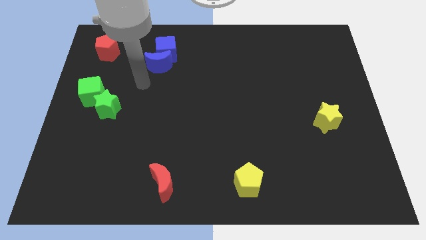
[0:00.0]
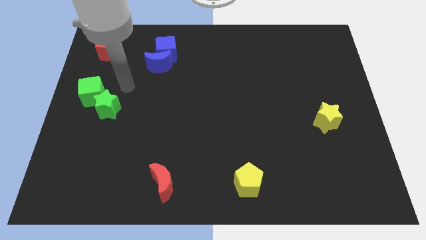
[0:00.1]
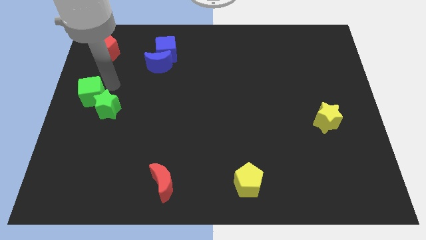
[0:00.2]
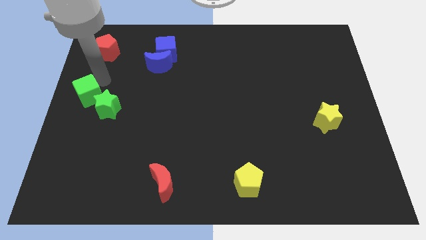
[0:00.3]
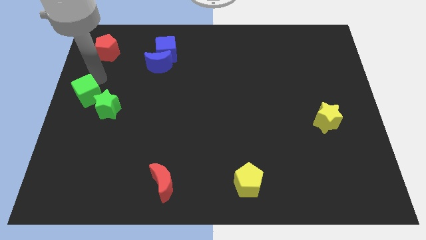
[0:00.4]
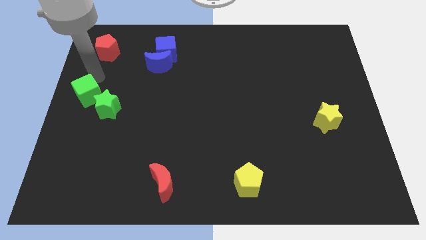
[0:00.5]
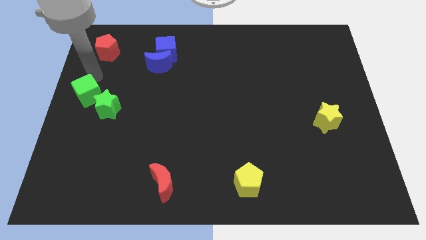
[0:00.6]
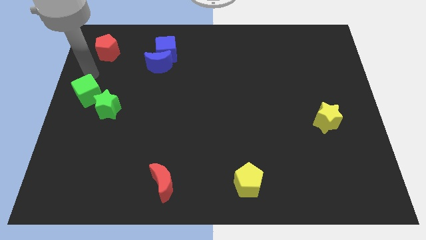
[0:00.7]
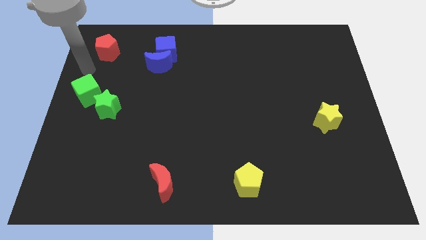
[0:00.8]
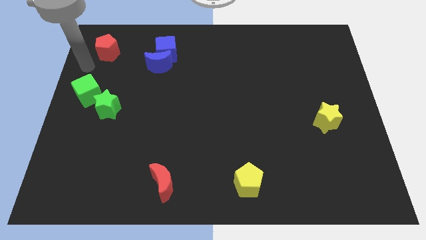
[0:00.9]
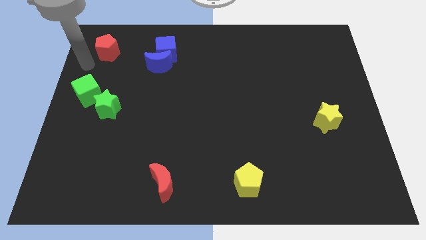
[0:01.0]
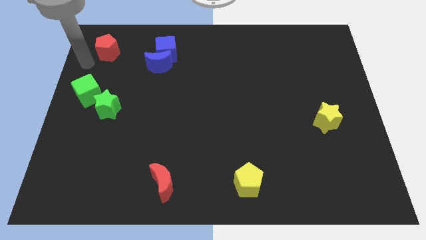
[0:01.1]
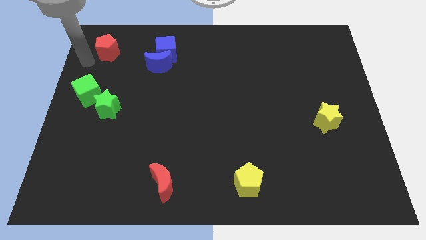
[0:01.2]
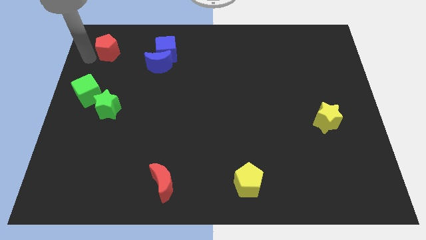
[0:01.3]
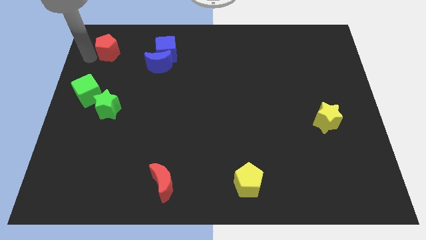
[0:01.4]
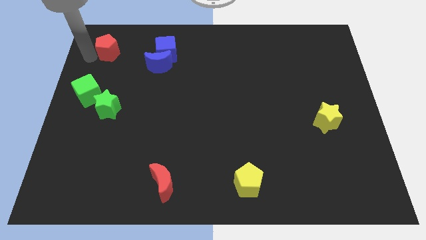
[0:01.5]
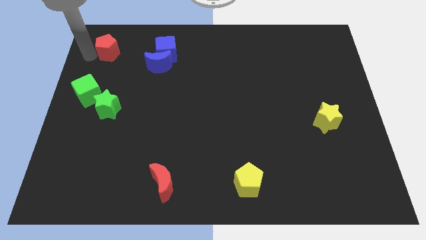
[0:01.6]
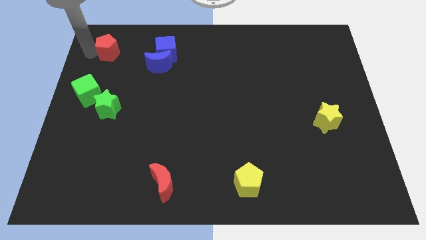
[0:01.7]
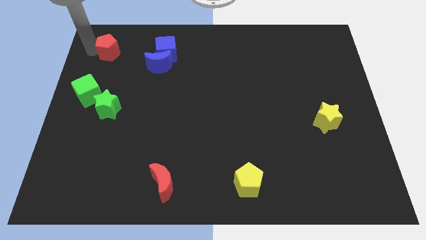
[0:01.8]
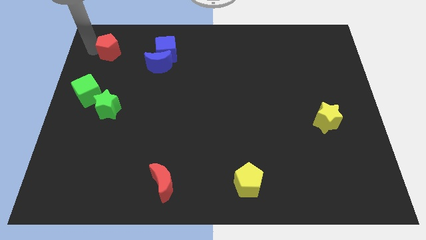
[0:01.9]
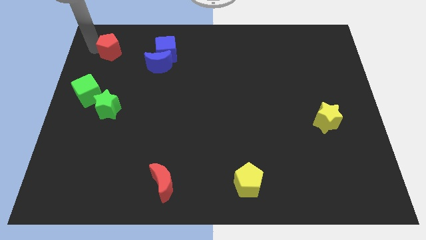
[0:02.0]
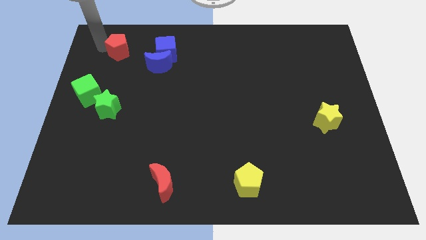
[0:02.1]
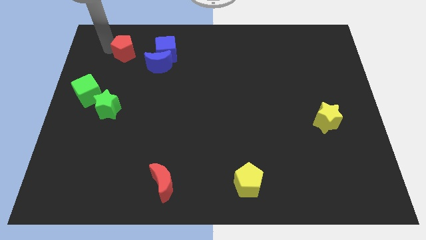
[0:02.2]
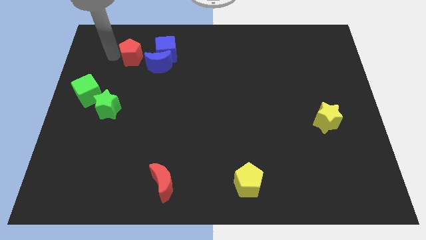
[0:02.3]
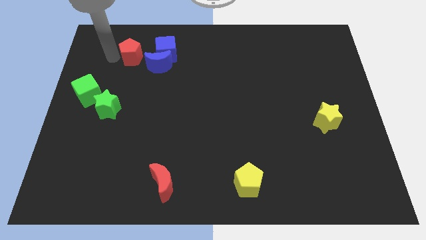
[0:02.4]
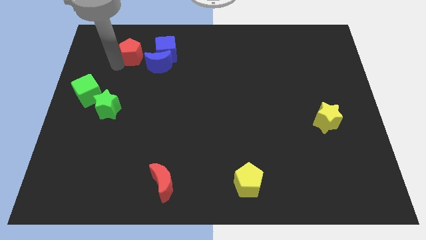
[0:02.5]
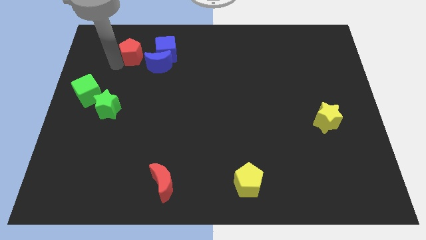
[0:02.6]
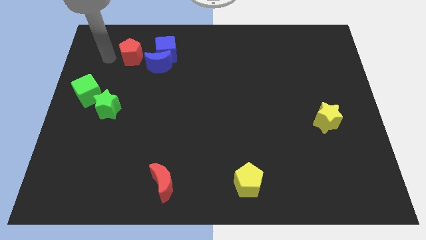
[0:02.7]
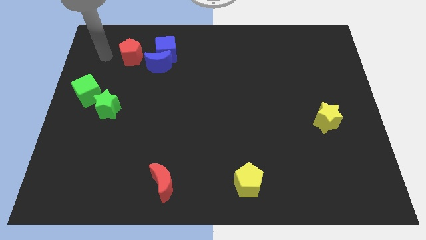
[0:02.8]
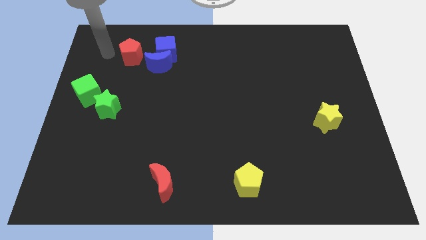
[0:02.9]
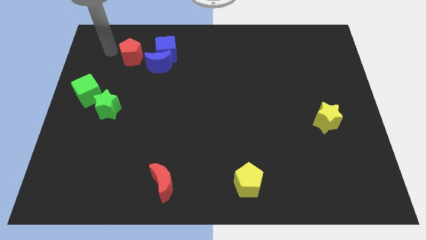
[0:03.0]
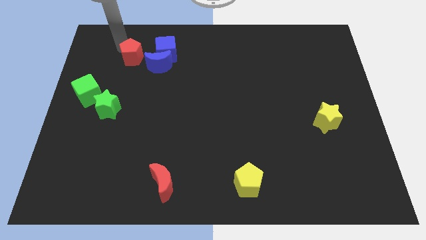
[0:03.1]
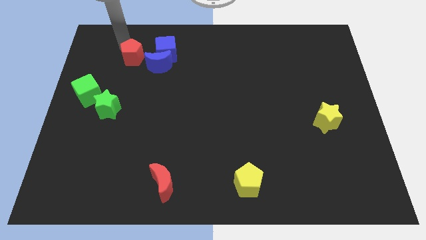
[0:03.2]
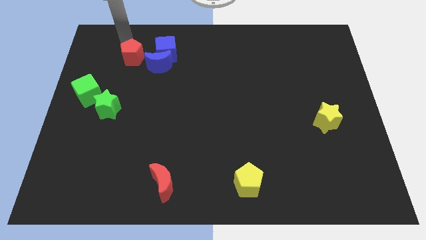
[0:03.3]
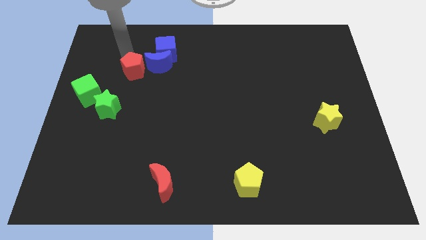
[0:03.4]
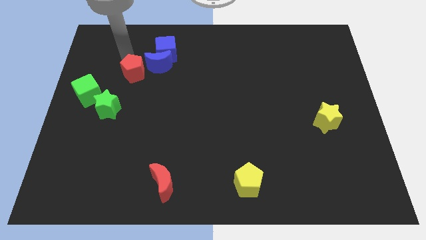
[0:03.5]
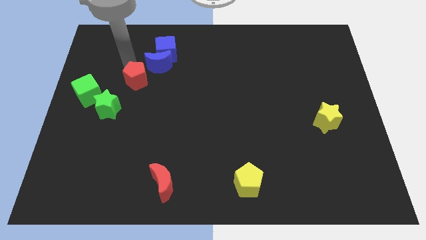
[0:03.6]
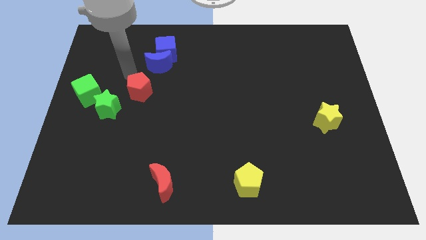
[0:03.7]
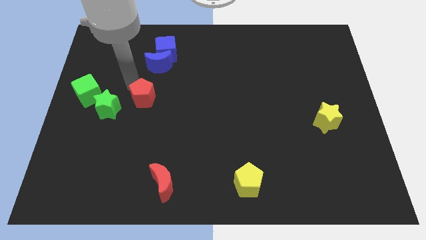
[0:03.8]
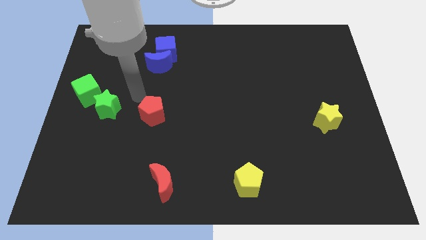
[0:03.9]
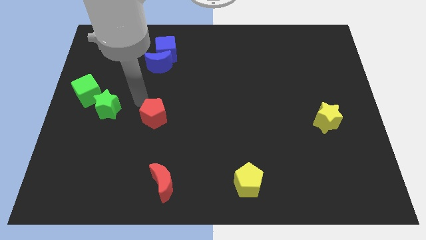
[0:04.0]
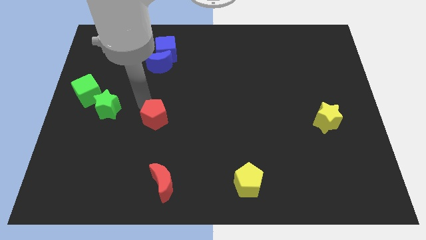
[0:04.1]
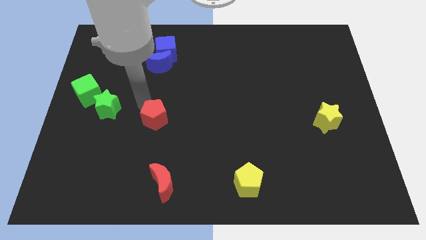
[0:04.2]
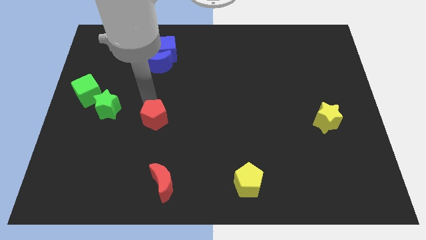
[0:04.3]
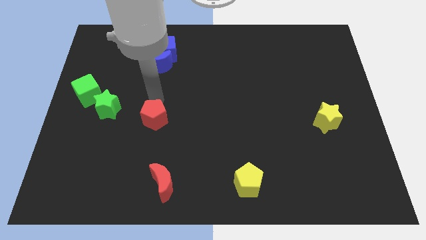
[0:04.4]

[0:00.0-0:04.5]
move the red pentagon to the right side of the green star

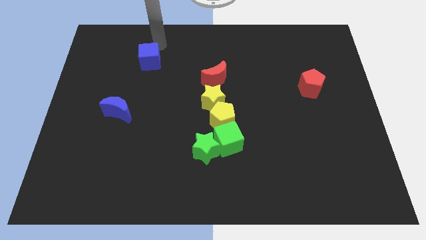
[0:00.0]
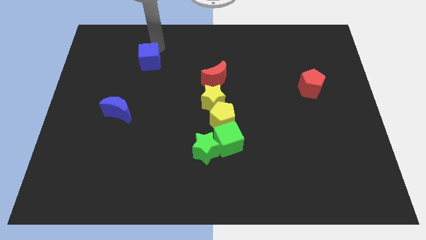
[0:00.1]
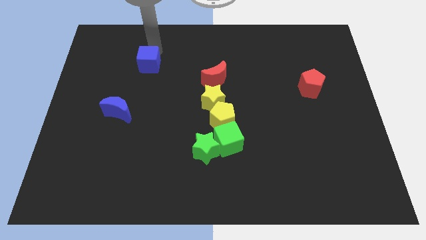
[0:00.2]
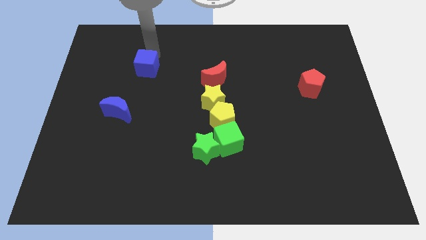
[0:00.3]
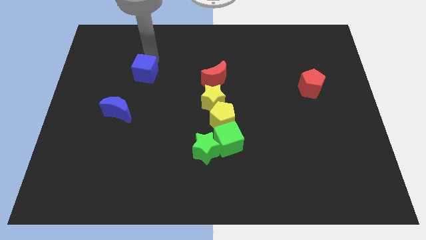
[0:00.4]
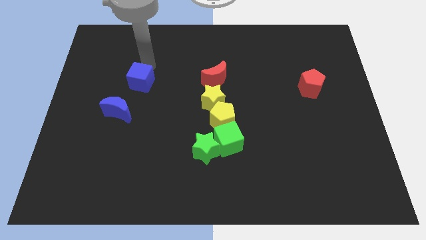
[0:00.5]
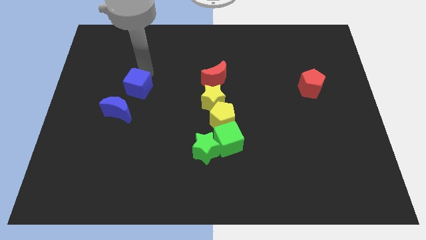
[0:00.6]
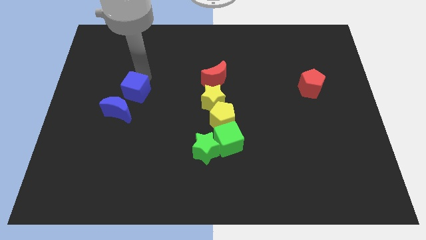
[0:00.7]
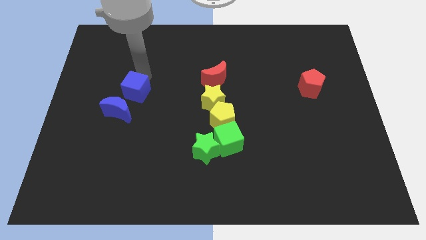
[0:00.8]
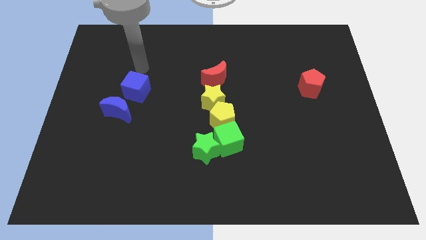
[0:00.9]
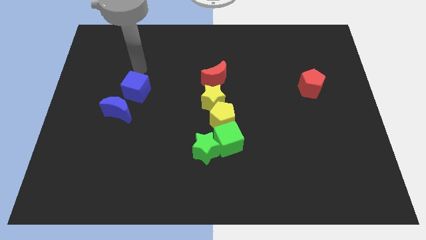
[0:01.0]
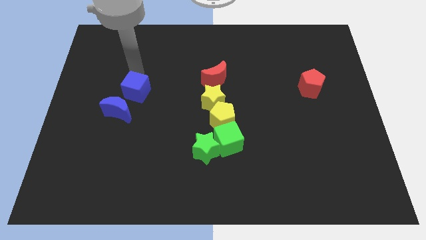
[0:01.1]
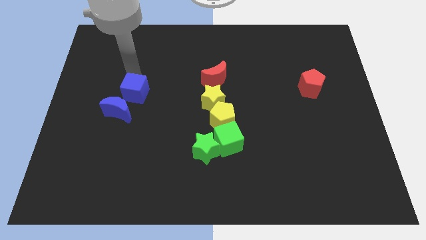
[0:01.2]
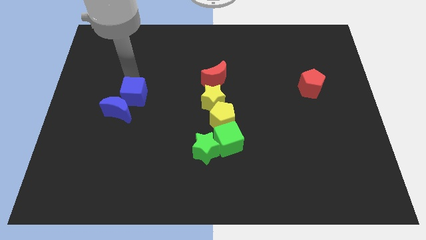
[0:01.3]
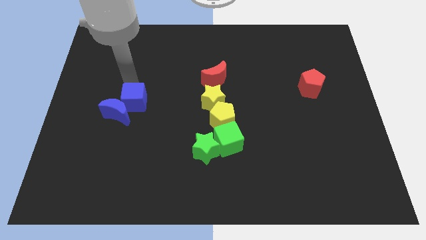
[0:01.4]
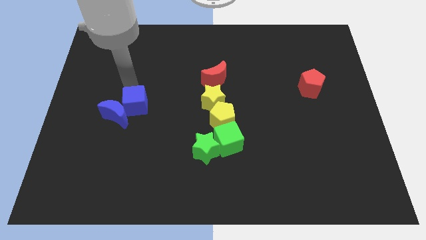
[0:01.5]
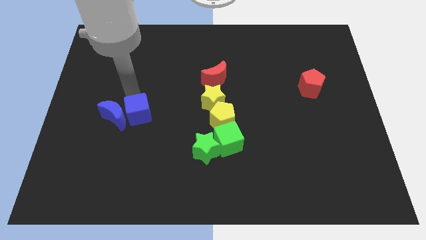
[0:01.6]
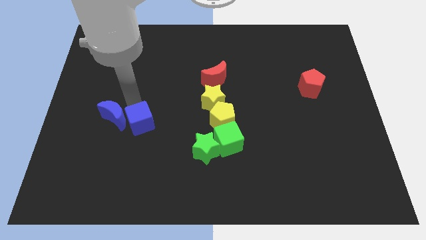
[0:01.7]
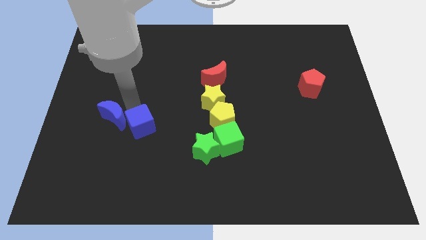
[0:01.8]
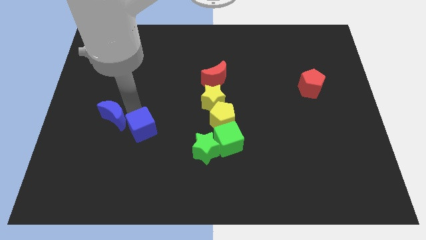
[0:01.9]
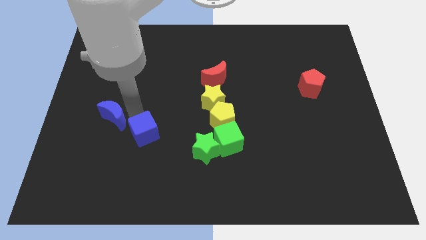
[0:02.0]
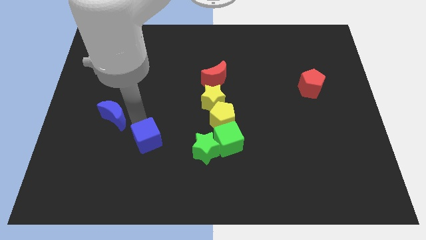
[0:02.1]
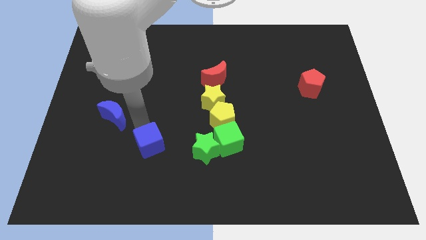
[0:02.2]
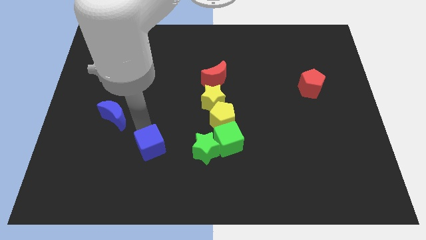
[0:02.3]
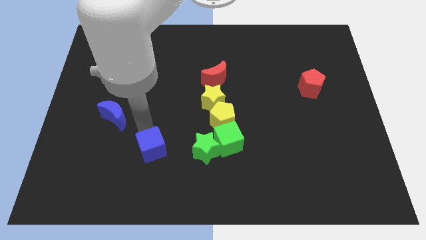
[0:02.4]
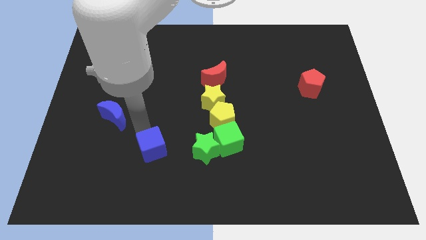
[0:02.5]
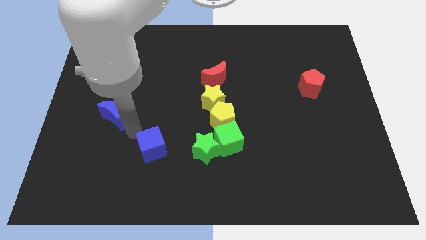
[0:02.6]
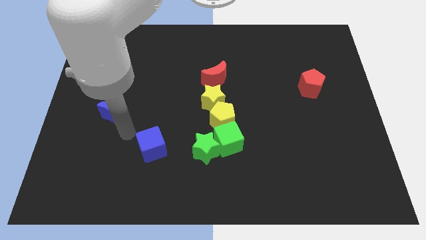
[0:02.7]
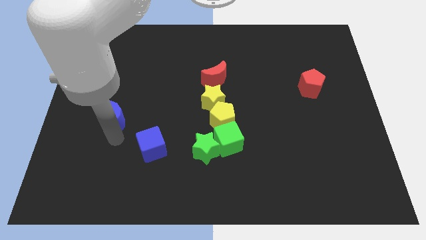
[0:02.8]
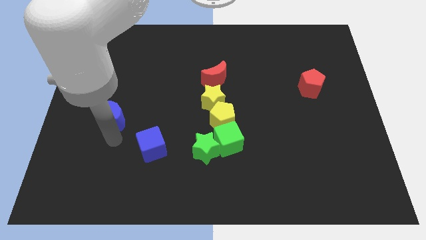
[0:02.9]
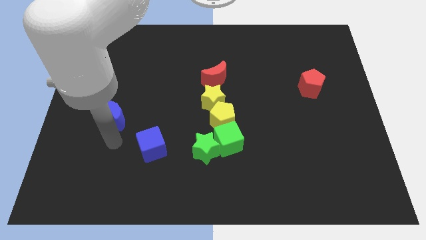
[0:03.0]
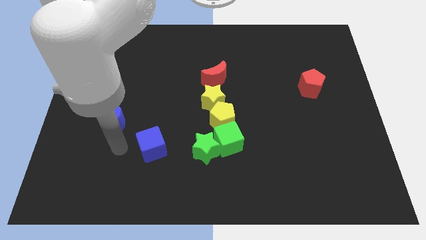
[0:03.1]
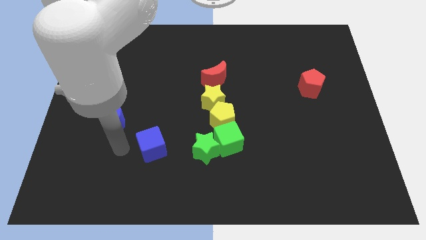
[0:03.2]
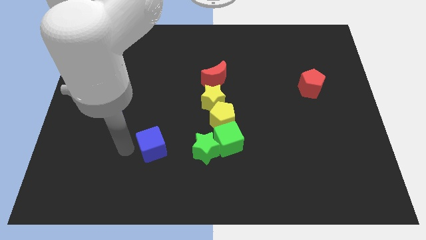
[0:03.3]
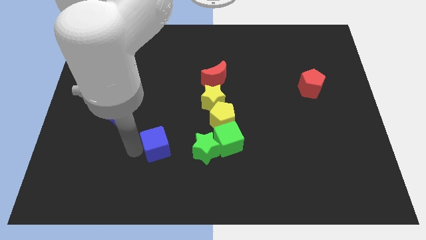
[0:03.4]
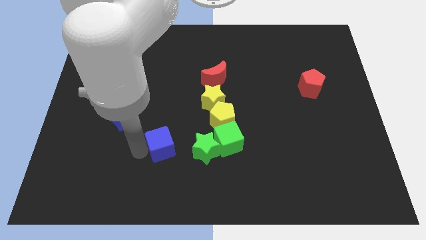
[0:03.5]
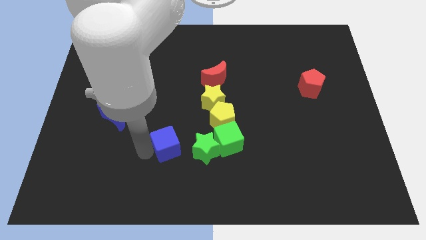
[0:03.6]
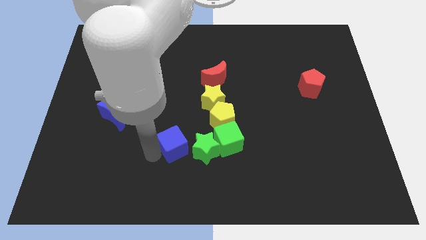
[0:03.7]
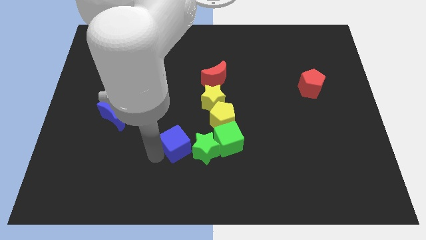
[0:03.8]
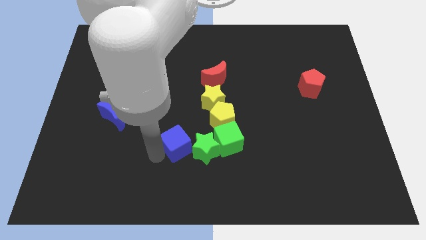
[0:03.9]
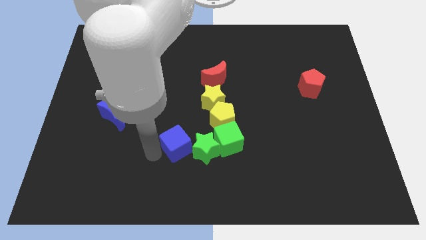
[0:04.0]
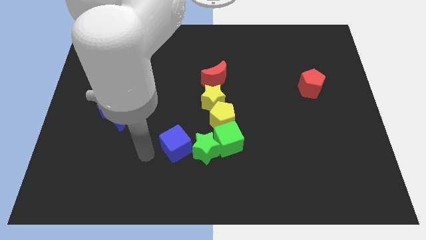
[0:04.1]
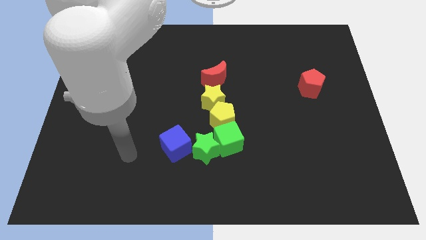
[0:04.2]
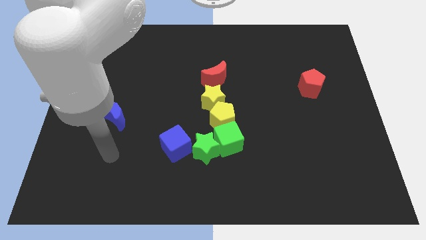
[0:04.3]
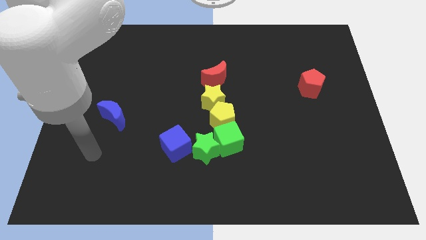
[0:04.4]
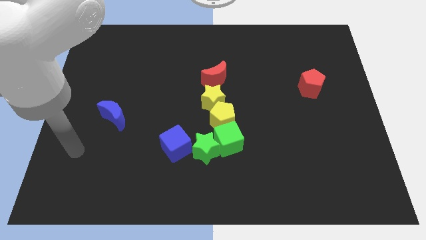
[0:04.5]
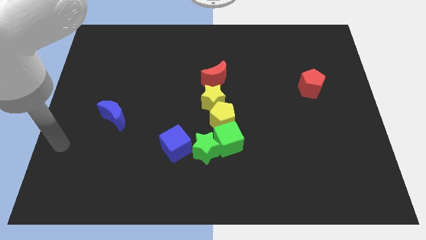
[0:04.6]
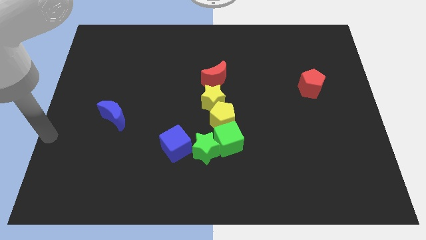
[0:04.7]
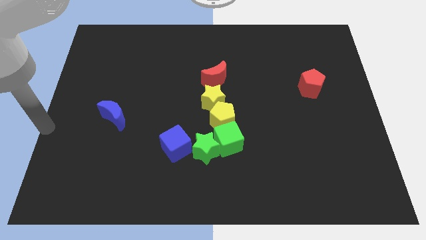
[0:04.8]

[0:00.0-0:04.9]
move the blue cube left beside the green star
